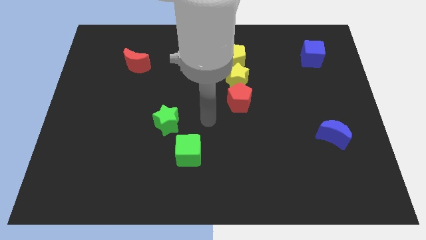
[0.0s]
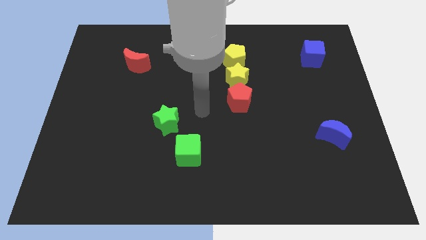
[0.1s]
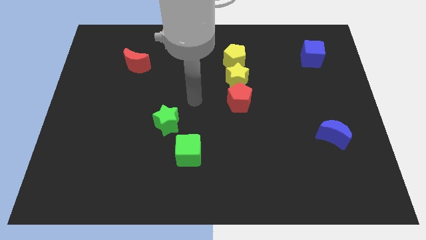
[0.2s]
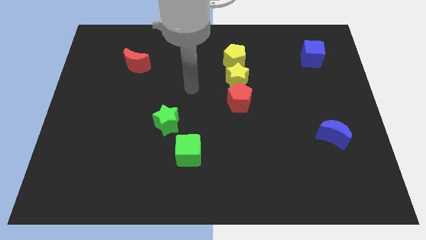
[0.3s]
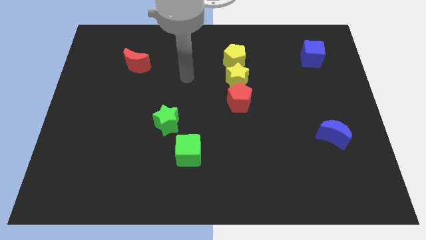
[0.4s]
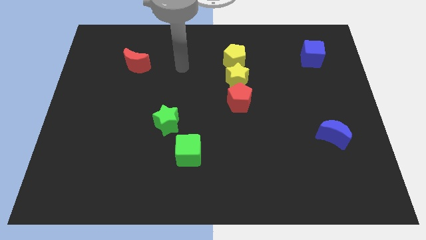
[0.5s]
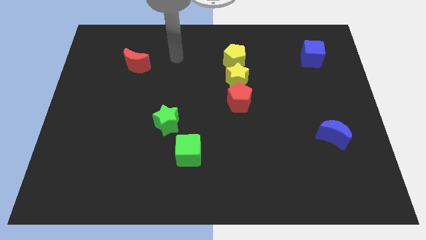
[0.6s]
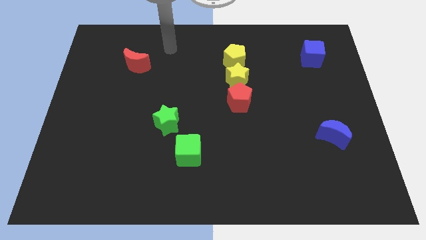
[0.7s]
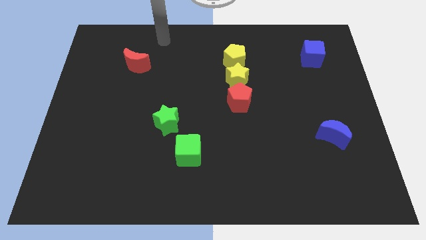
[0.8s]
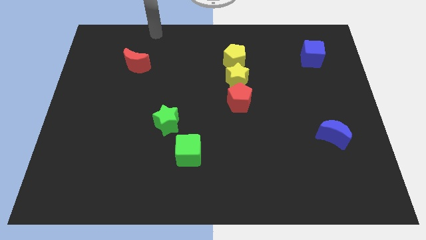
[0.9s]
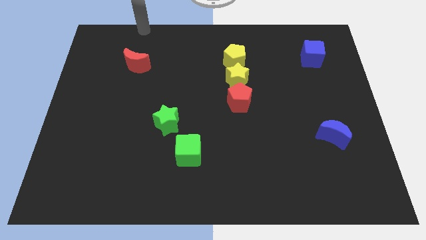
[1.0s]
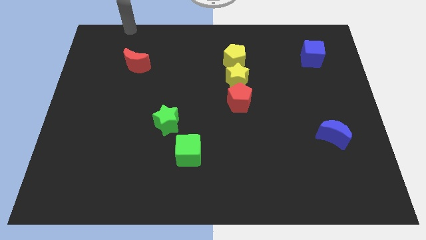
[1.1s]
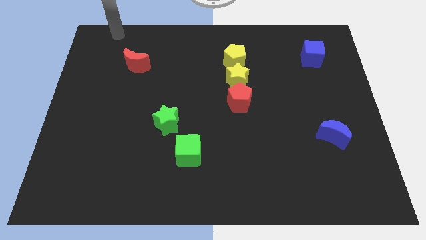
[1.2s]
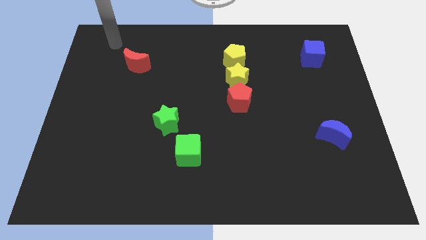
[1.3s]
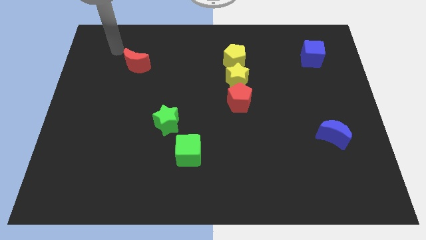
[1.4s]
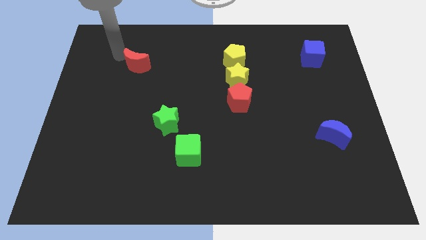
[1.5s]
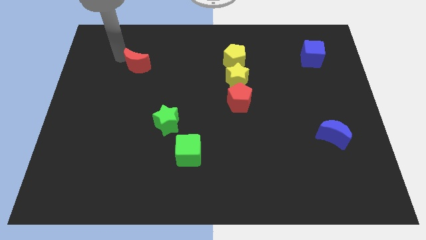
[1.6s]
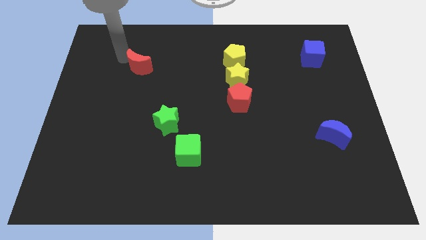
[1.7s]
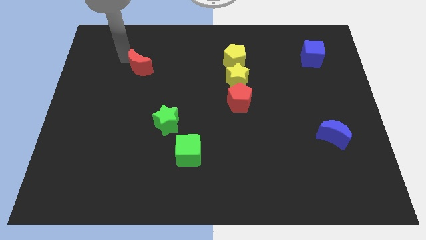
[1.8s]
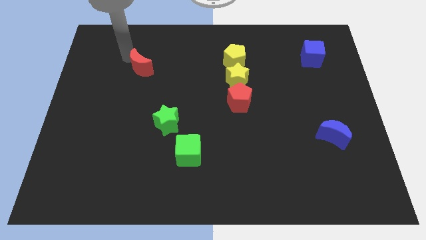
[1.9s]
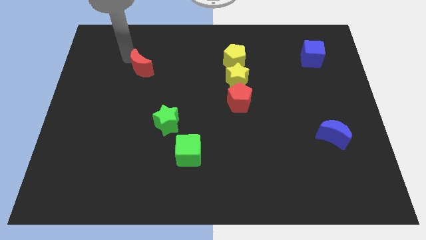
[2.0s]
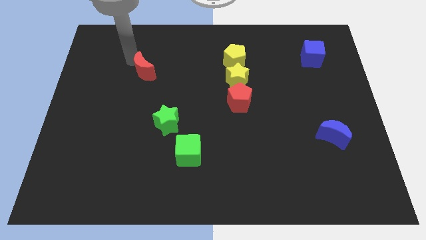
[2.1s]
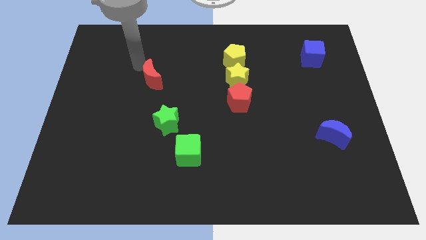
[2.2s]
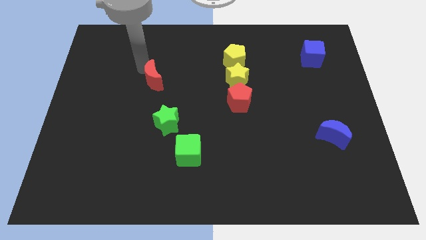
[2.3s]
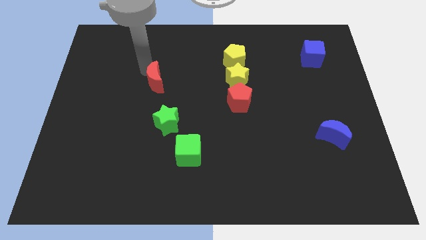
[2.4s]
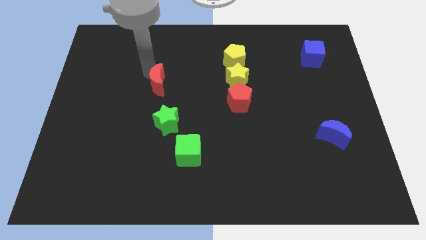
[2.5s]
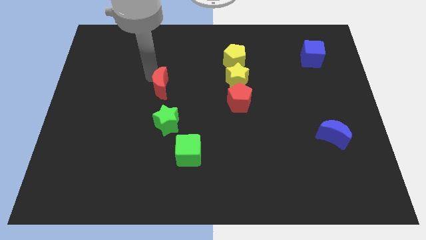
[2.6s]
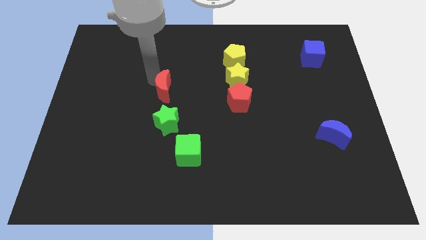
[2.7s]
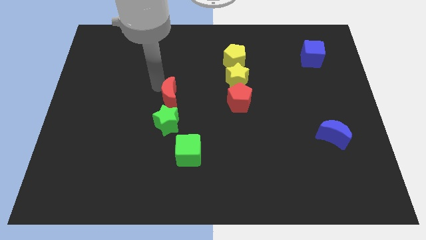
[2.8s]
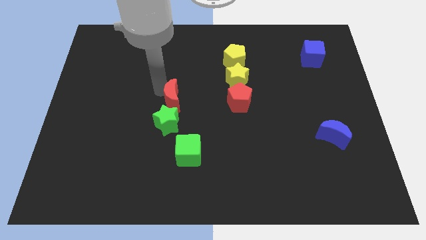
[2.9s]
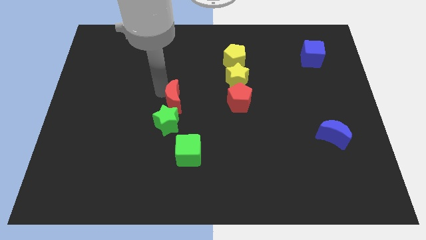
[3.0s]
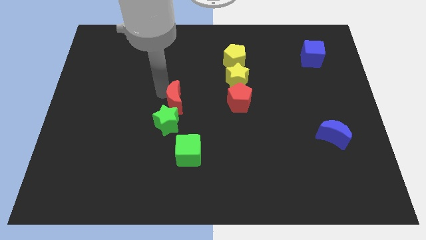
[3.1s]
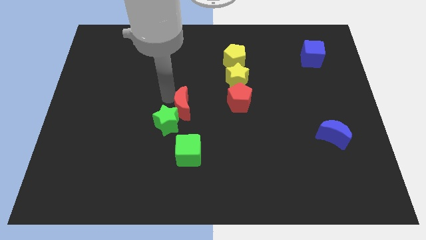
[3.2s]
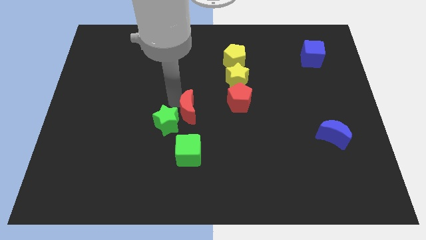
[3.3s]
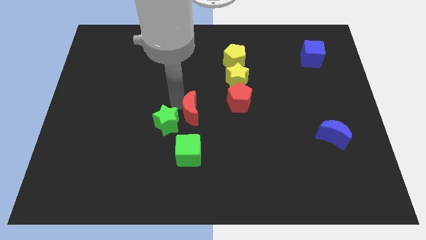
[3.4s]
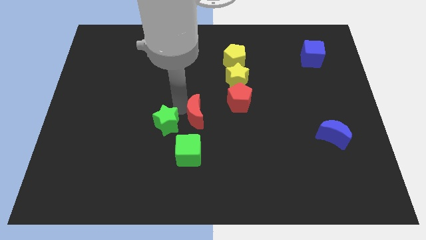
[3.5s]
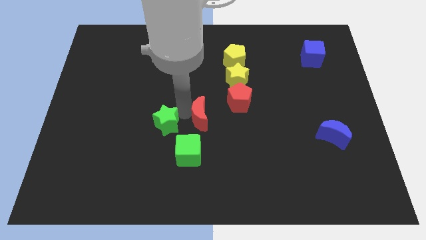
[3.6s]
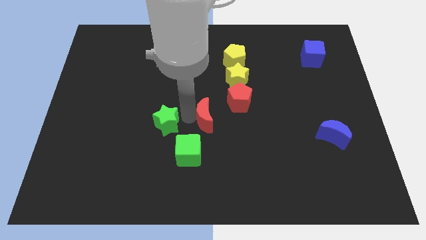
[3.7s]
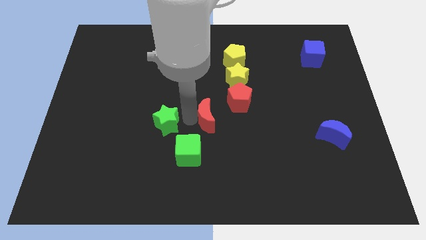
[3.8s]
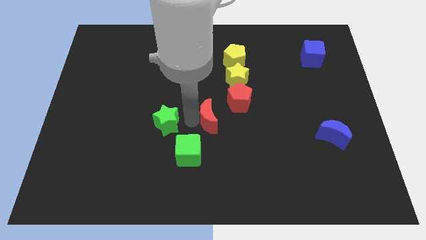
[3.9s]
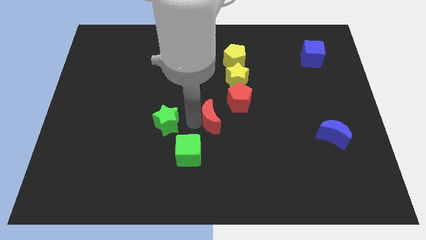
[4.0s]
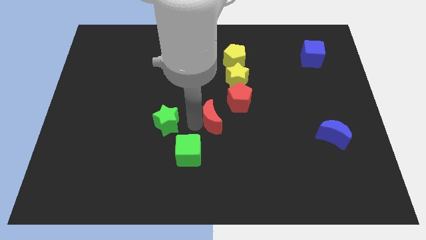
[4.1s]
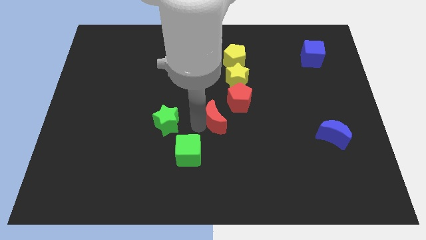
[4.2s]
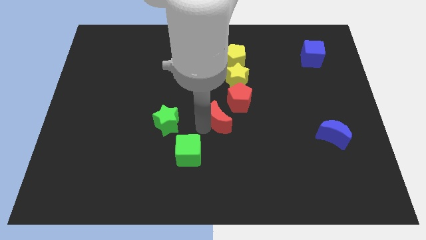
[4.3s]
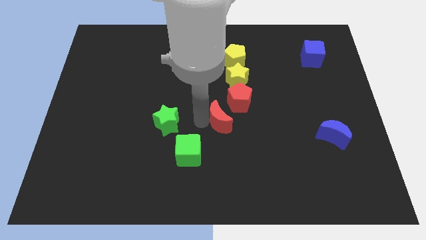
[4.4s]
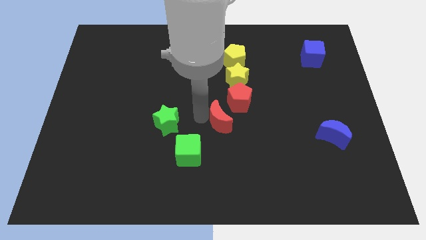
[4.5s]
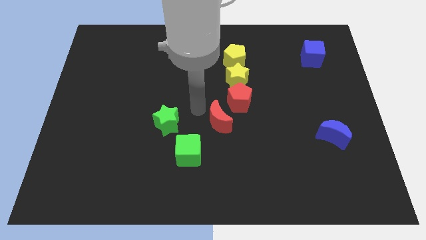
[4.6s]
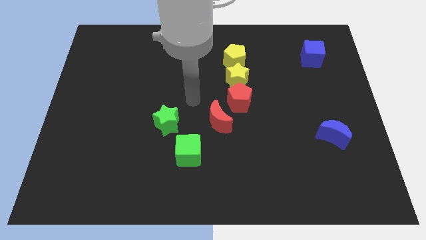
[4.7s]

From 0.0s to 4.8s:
move the red moon close to the red pentagon

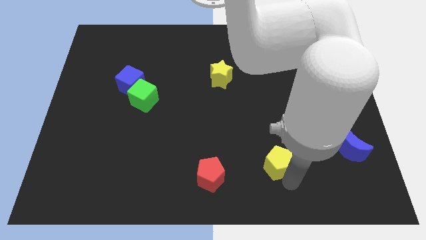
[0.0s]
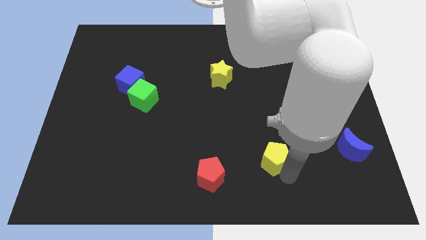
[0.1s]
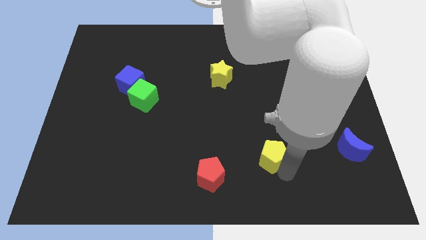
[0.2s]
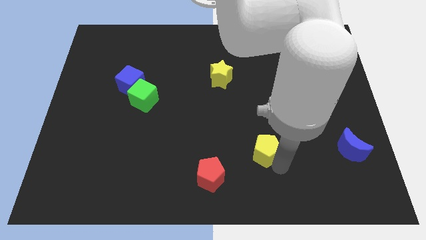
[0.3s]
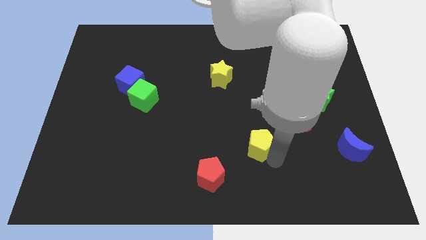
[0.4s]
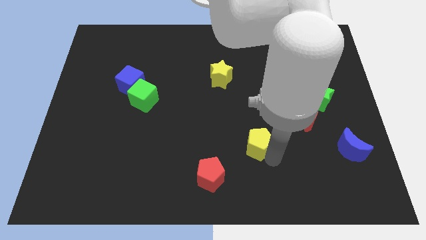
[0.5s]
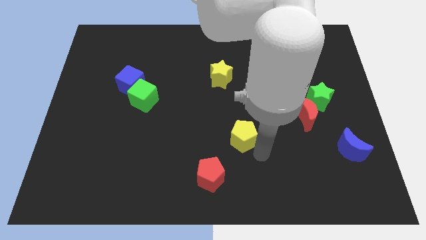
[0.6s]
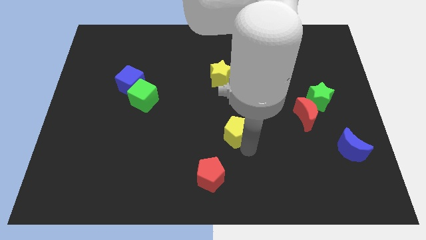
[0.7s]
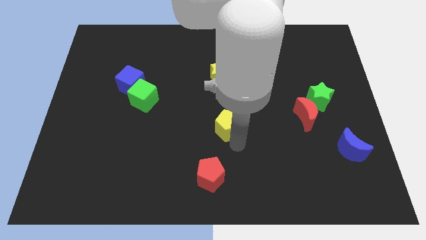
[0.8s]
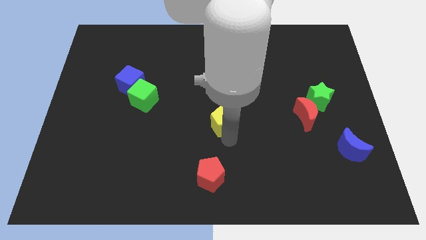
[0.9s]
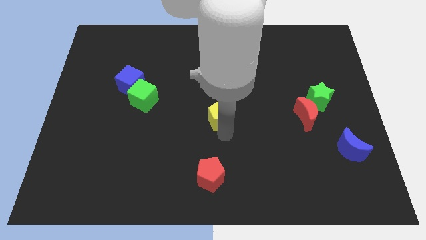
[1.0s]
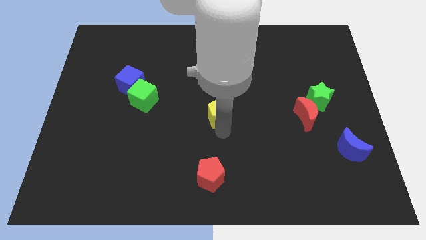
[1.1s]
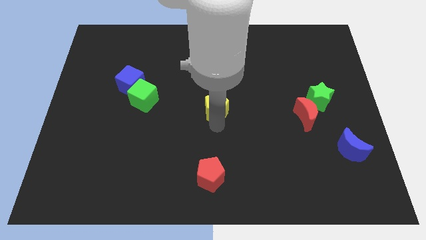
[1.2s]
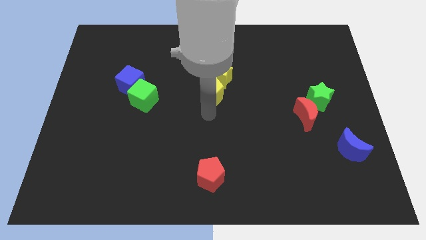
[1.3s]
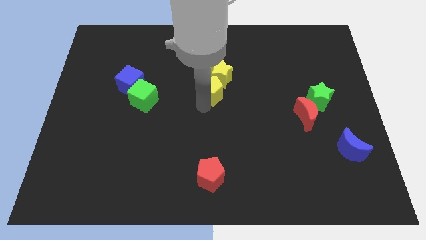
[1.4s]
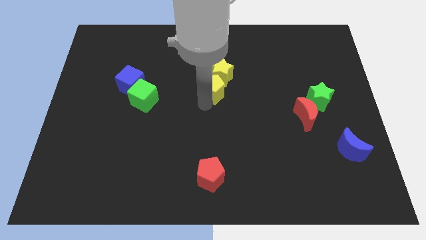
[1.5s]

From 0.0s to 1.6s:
drag the yellow pentagon into the bottom side of the yellow star

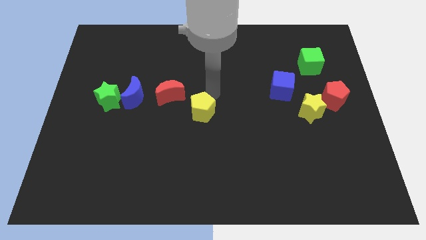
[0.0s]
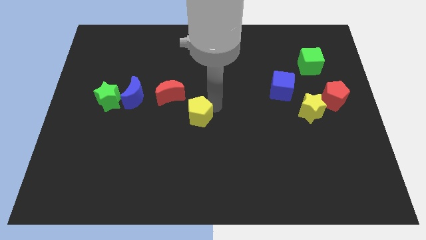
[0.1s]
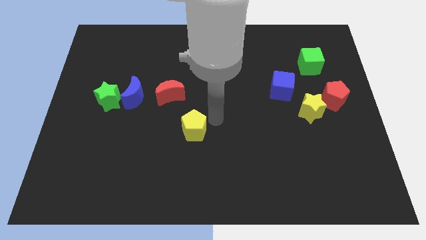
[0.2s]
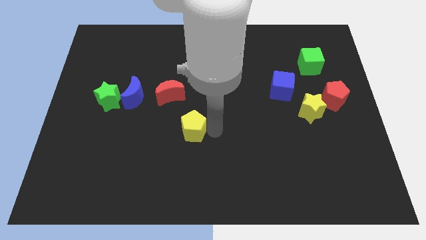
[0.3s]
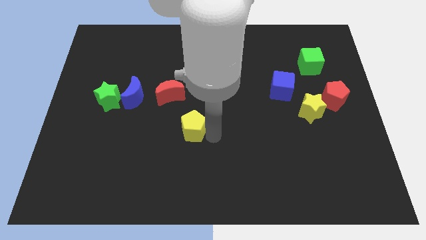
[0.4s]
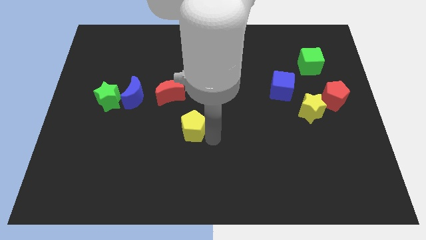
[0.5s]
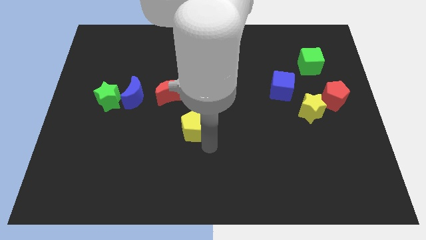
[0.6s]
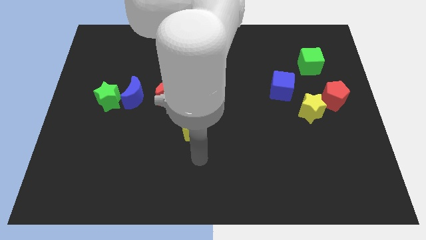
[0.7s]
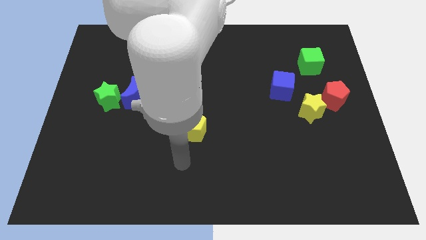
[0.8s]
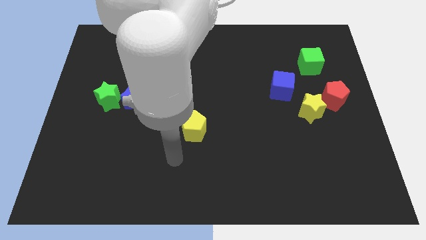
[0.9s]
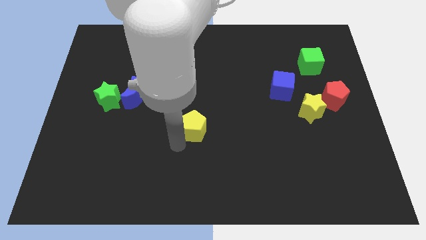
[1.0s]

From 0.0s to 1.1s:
push yellow pentagon slightly down

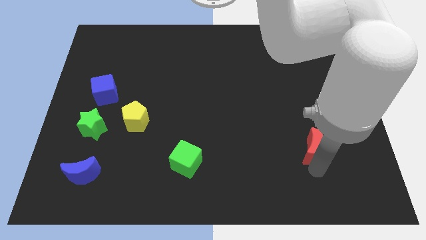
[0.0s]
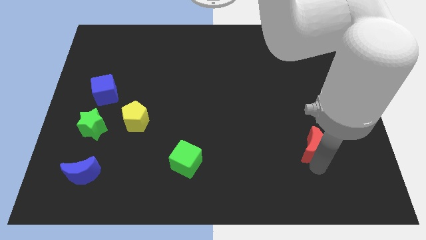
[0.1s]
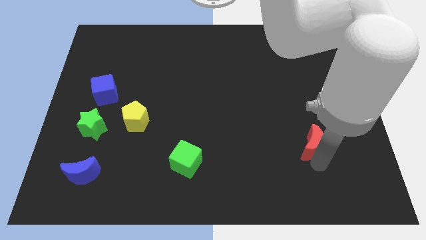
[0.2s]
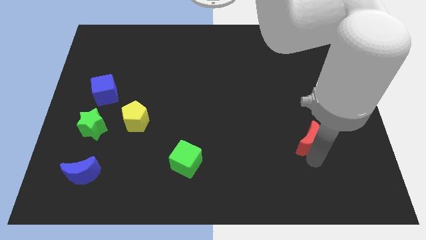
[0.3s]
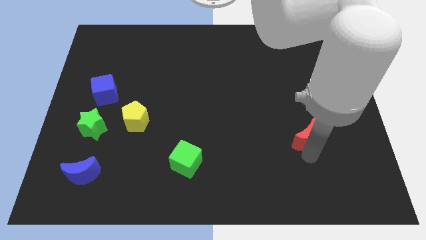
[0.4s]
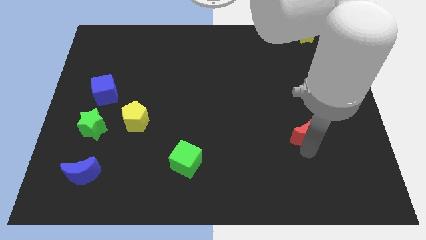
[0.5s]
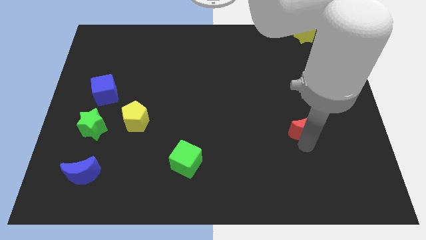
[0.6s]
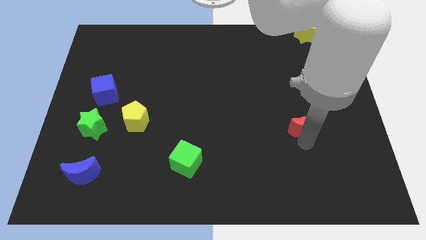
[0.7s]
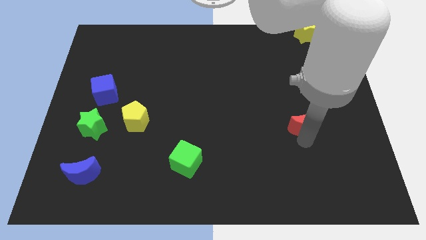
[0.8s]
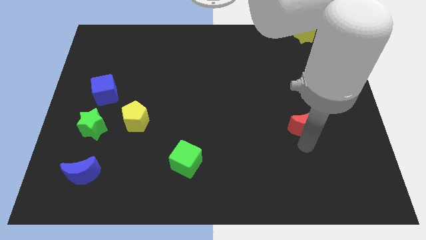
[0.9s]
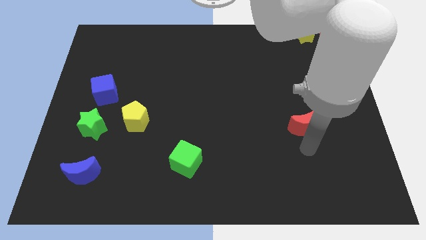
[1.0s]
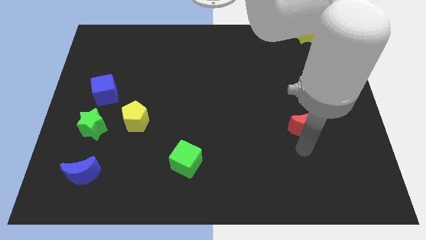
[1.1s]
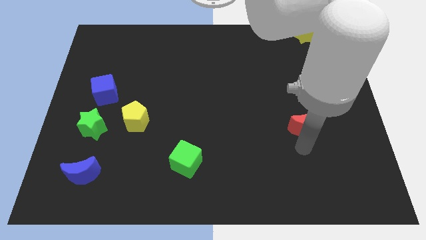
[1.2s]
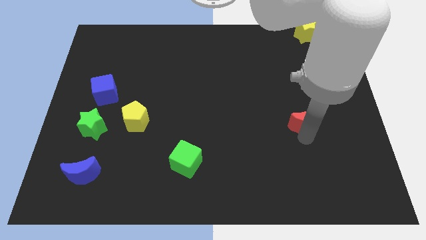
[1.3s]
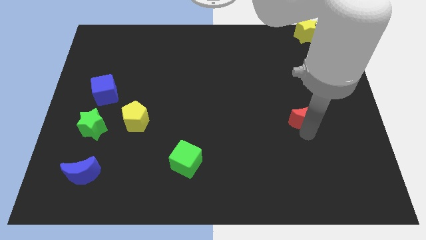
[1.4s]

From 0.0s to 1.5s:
move the red moon slightly towards top side of the board
